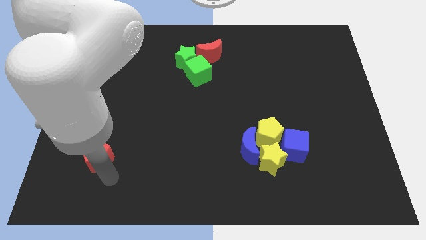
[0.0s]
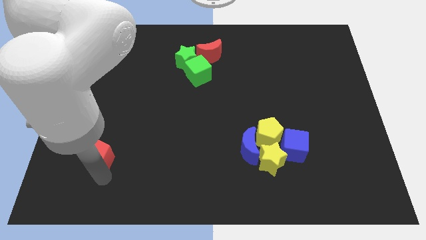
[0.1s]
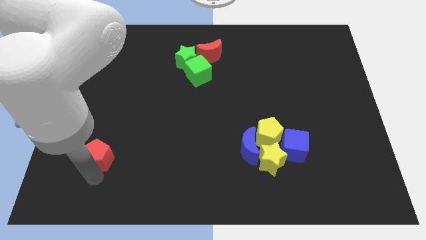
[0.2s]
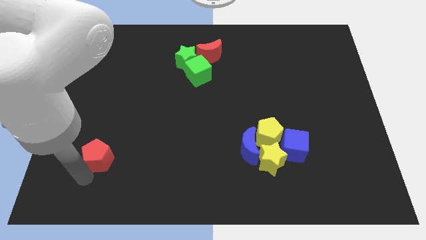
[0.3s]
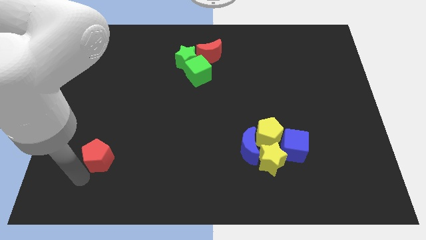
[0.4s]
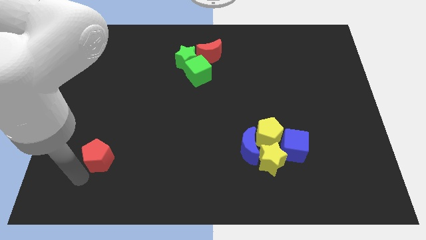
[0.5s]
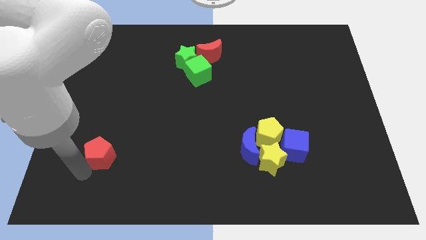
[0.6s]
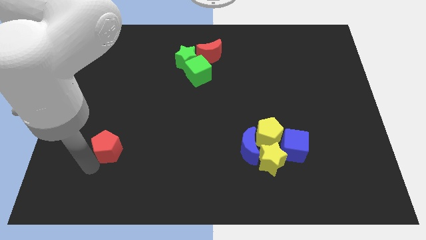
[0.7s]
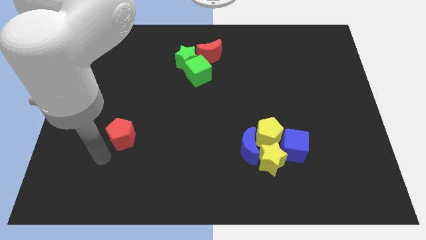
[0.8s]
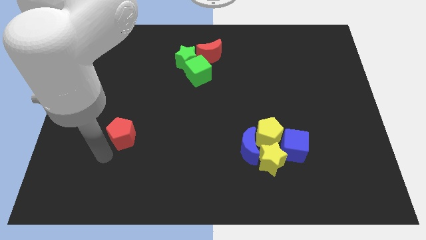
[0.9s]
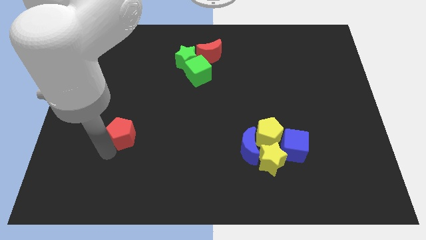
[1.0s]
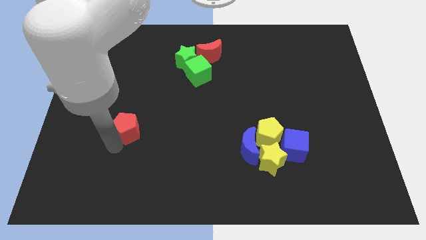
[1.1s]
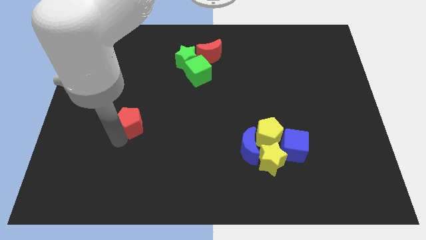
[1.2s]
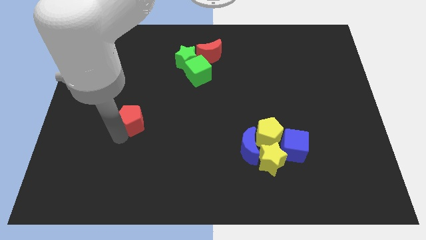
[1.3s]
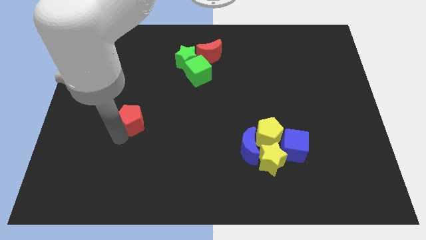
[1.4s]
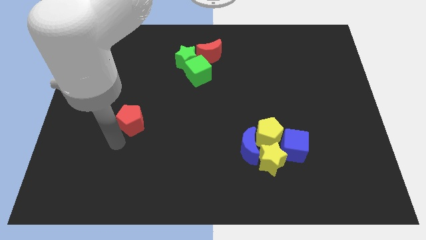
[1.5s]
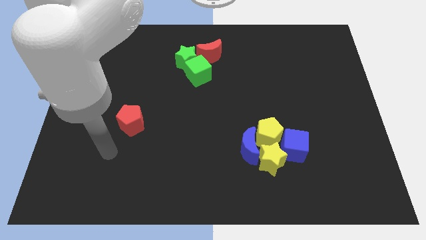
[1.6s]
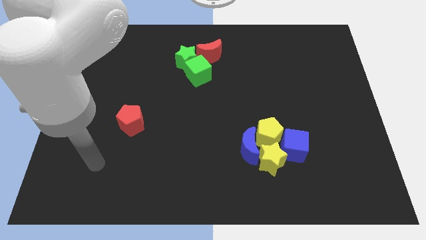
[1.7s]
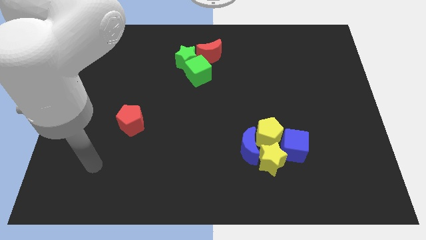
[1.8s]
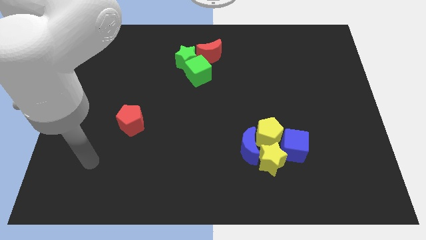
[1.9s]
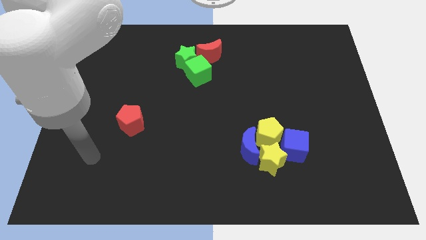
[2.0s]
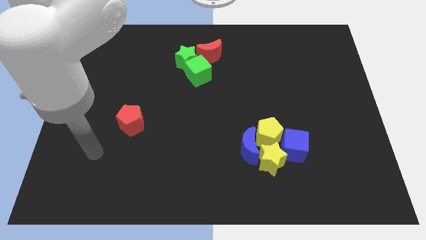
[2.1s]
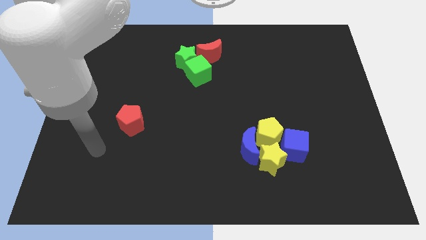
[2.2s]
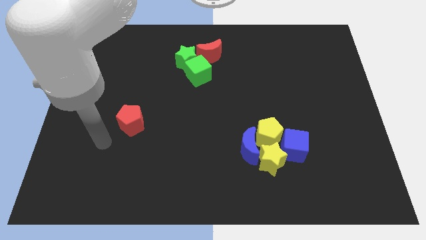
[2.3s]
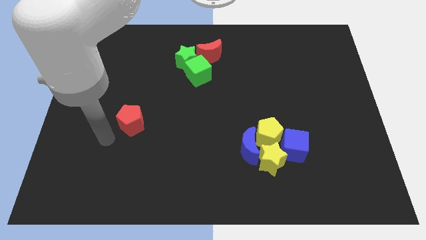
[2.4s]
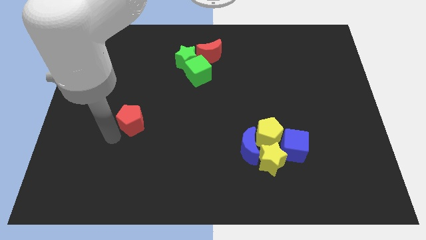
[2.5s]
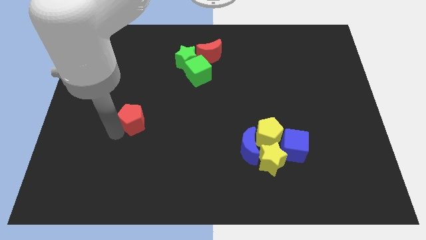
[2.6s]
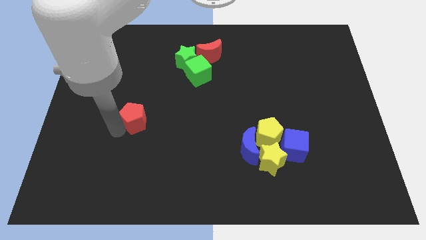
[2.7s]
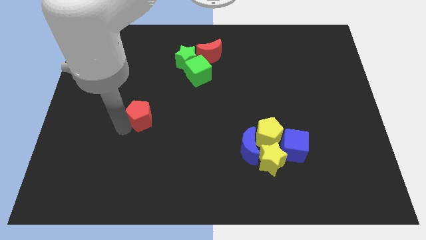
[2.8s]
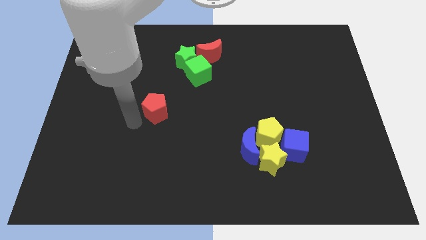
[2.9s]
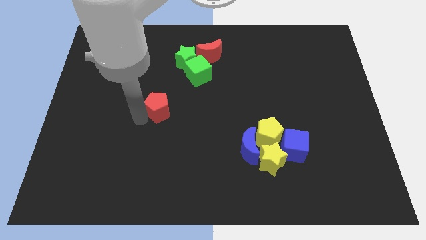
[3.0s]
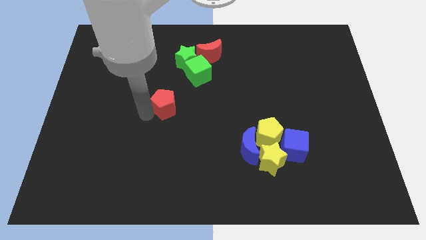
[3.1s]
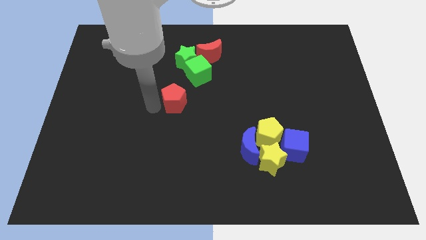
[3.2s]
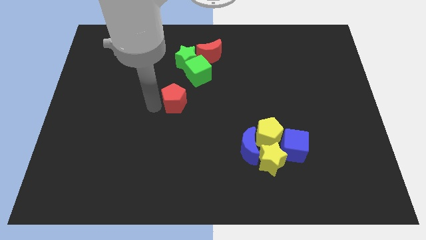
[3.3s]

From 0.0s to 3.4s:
push the red pentagon towards the bottom side of the green cube

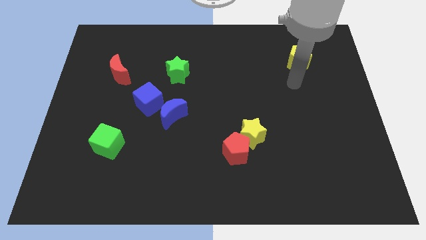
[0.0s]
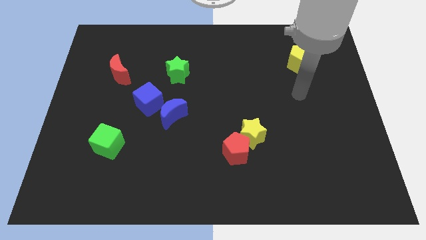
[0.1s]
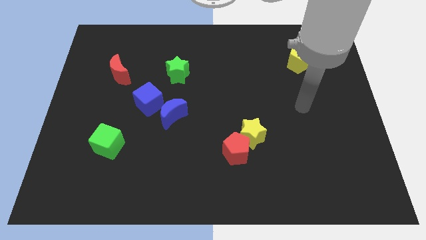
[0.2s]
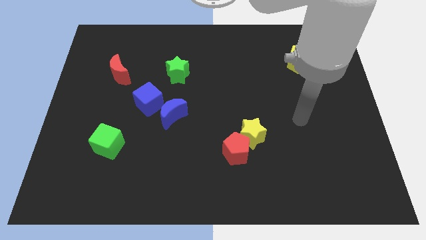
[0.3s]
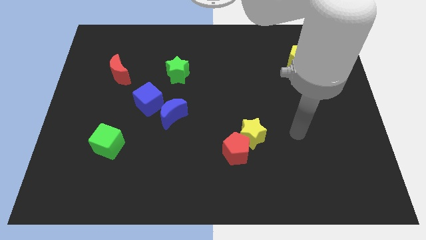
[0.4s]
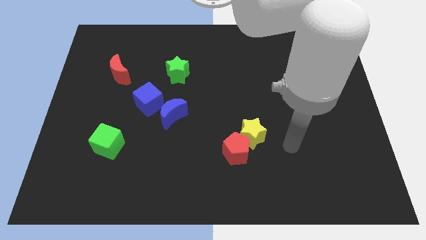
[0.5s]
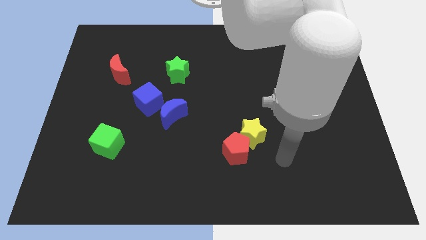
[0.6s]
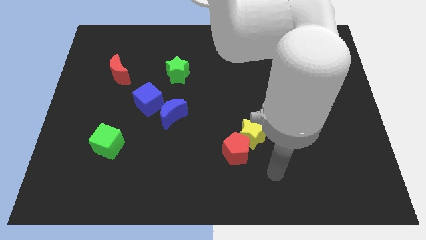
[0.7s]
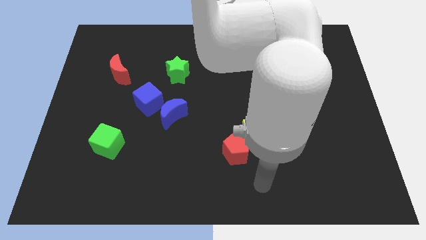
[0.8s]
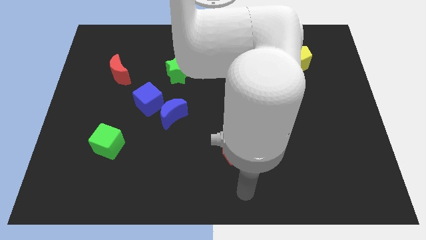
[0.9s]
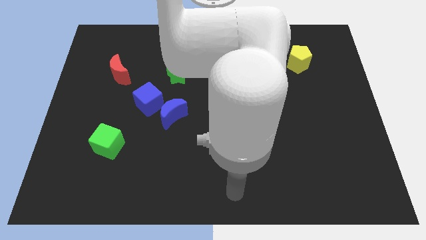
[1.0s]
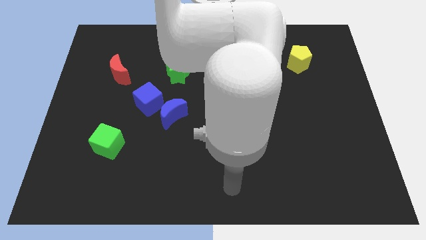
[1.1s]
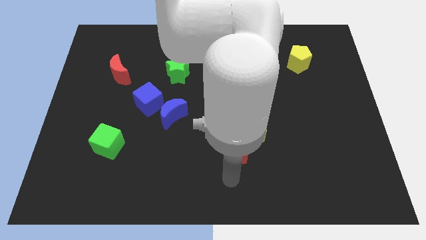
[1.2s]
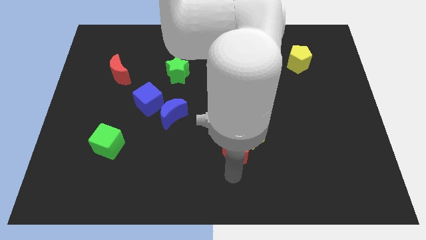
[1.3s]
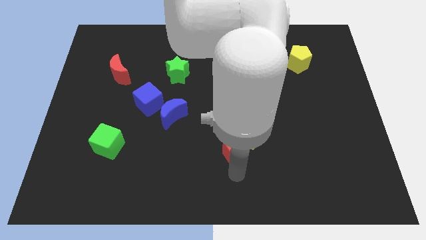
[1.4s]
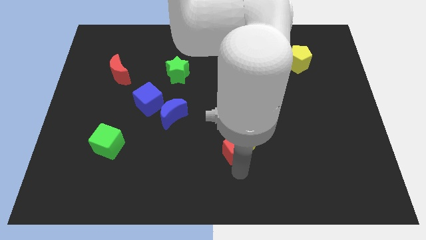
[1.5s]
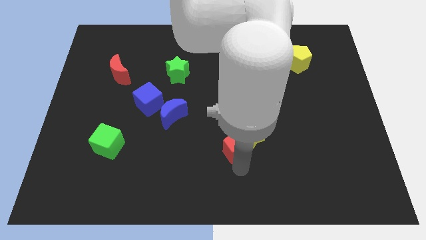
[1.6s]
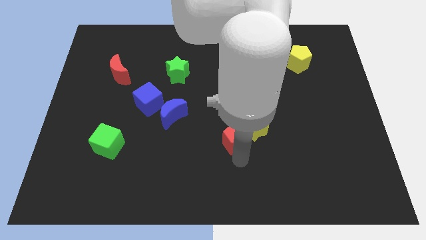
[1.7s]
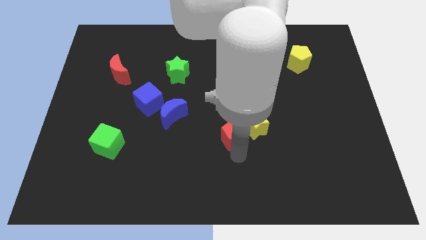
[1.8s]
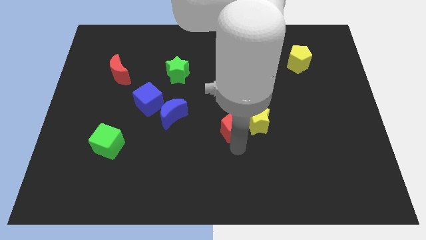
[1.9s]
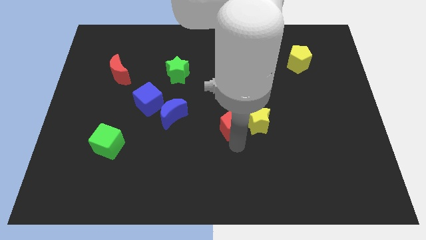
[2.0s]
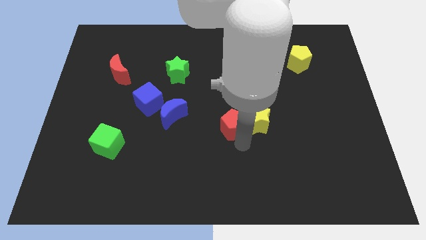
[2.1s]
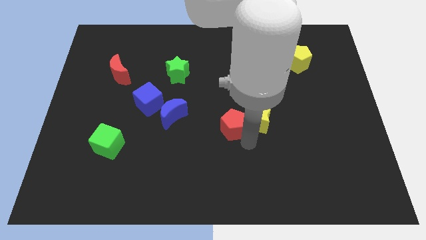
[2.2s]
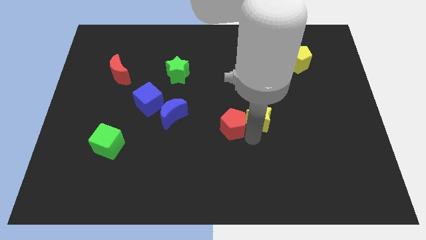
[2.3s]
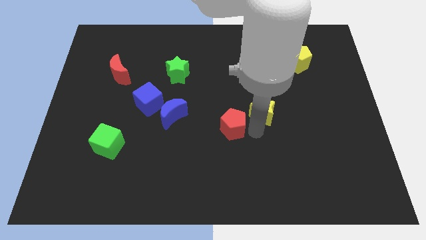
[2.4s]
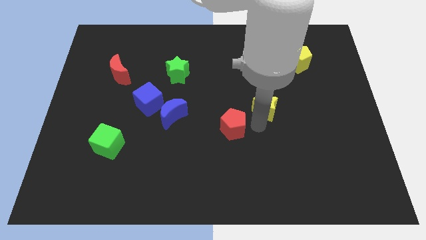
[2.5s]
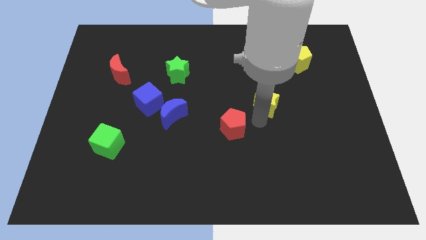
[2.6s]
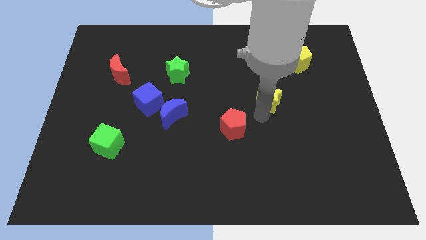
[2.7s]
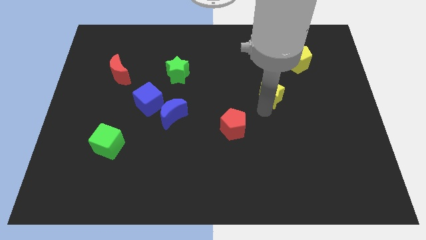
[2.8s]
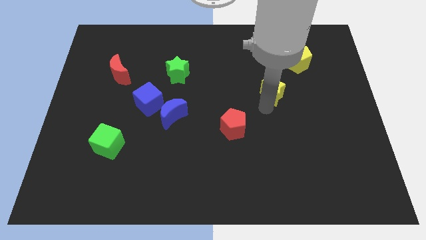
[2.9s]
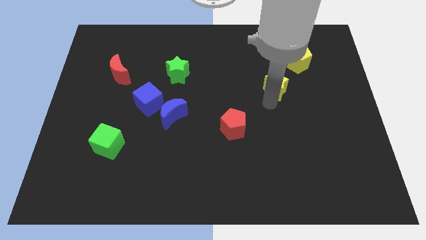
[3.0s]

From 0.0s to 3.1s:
separate the yellow star from the red pentagon

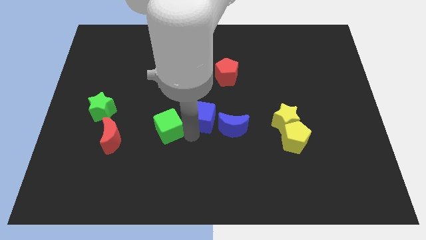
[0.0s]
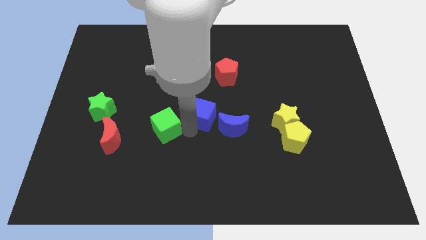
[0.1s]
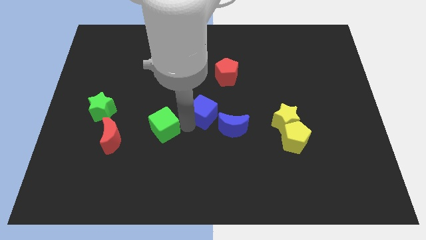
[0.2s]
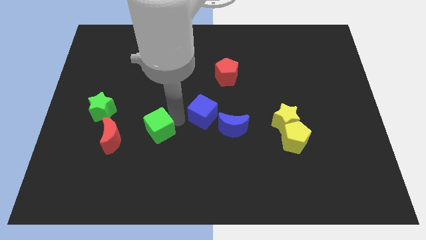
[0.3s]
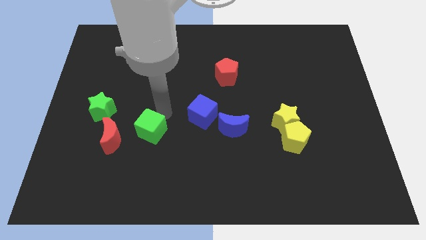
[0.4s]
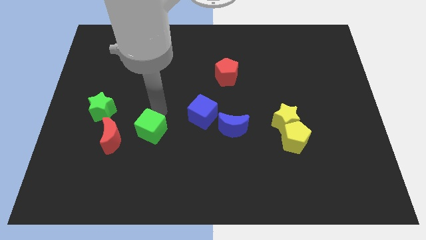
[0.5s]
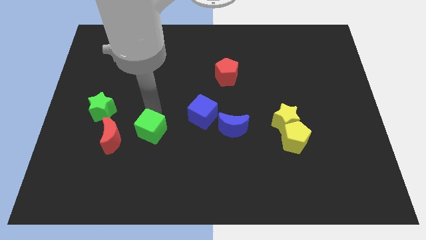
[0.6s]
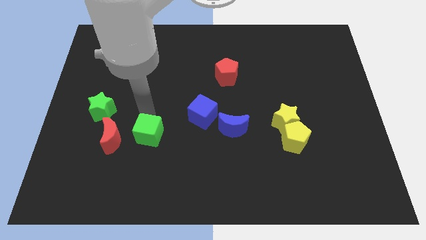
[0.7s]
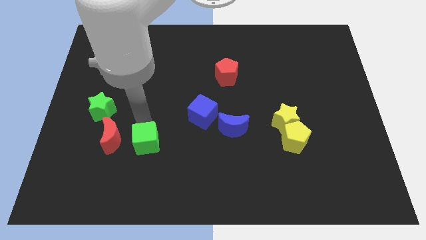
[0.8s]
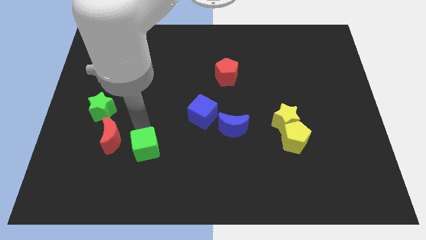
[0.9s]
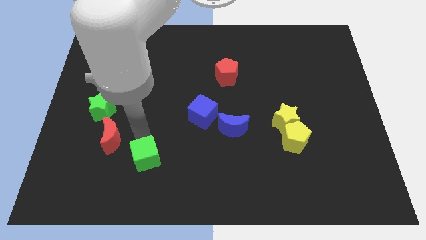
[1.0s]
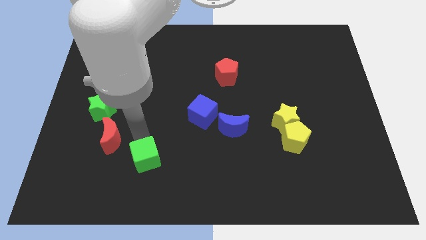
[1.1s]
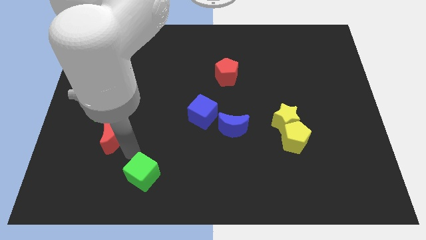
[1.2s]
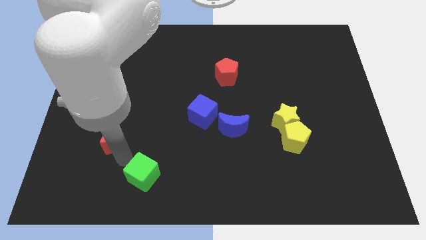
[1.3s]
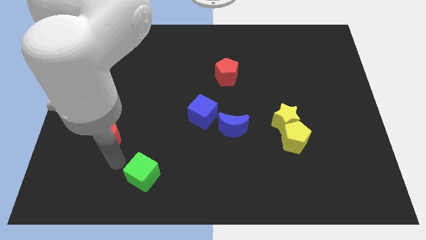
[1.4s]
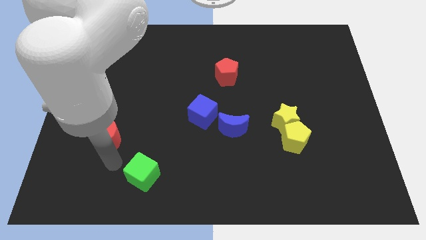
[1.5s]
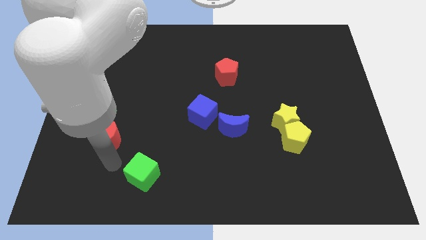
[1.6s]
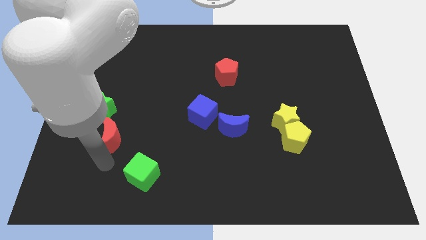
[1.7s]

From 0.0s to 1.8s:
push the green cube towards the bottom

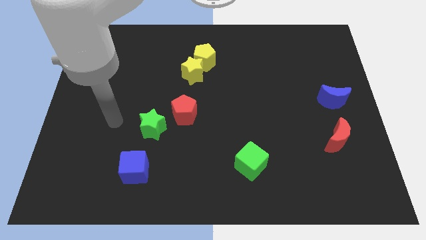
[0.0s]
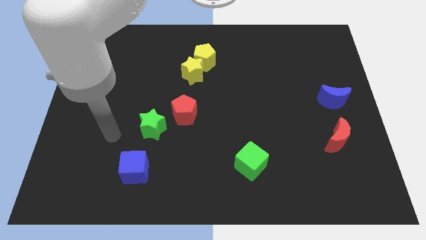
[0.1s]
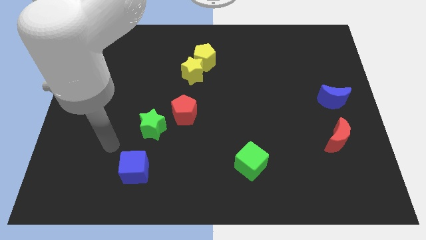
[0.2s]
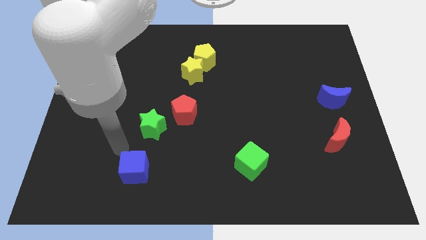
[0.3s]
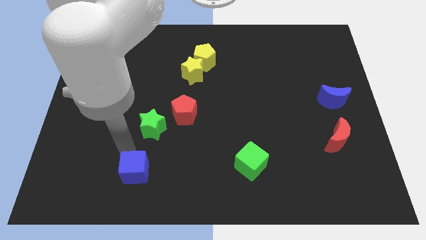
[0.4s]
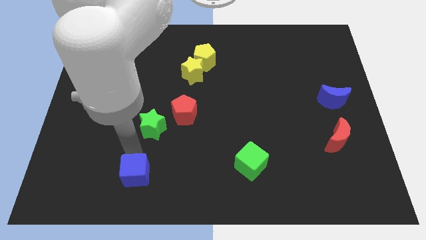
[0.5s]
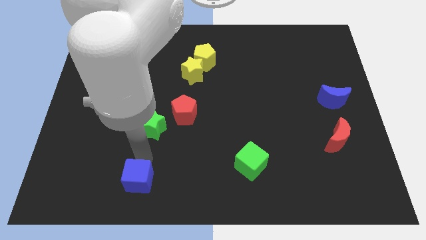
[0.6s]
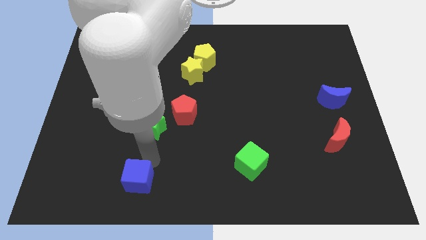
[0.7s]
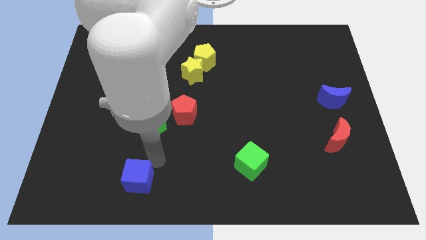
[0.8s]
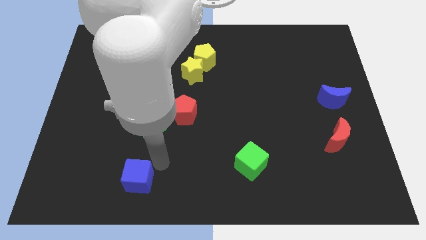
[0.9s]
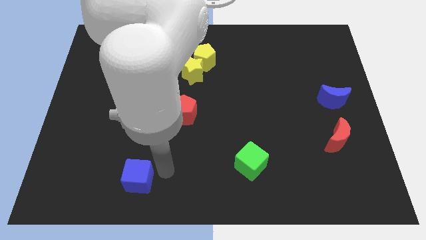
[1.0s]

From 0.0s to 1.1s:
slightly push the blue cube towards the bottom side of the board
